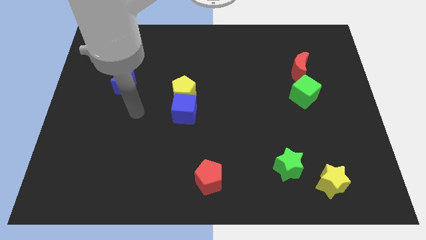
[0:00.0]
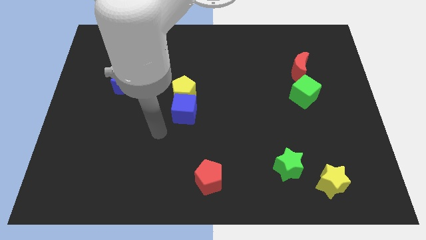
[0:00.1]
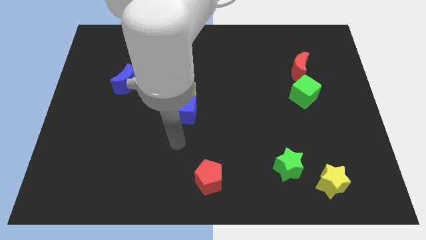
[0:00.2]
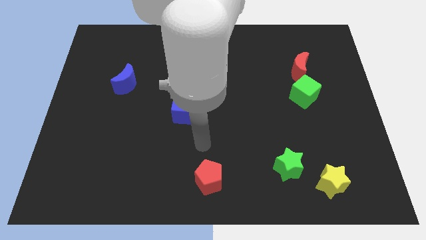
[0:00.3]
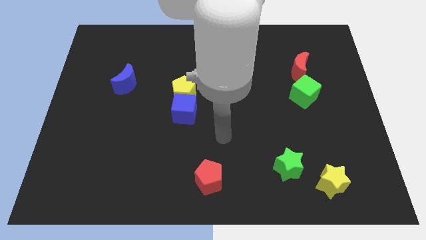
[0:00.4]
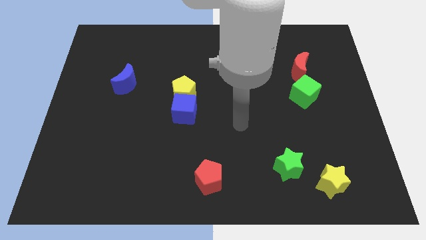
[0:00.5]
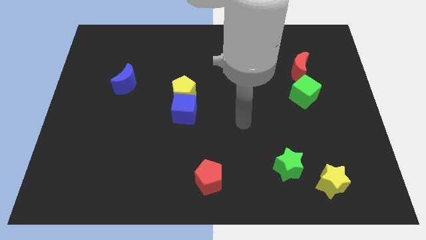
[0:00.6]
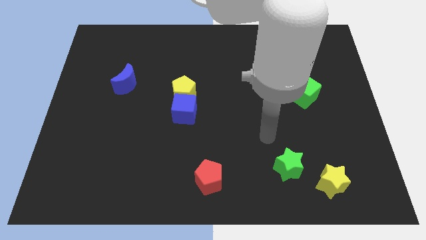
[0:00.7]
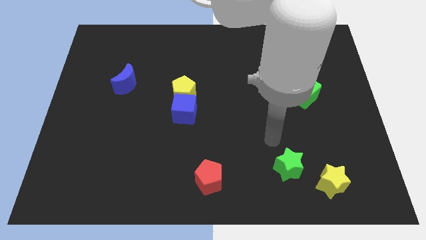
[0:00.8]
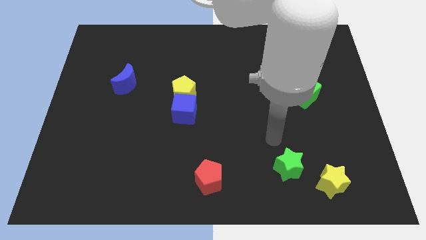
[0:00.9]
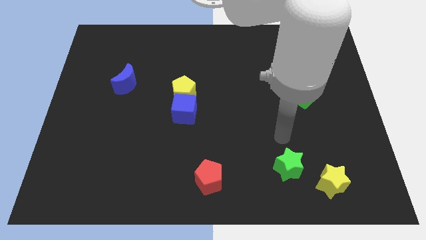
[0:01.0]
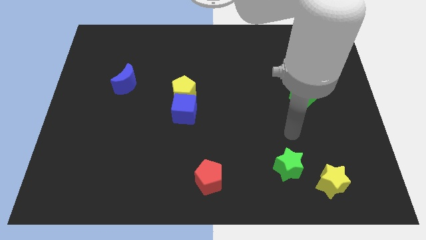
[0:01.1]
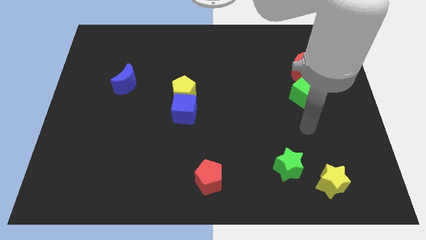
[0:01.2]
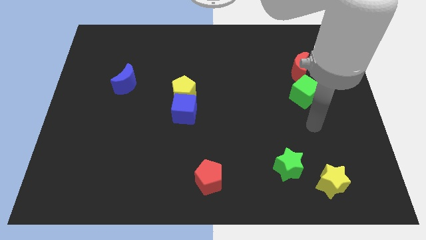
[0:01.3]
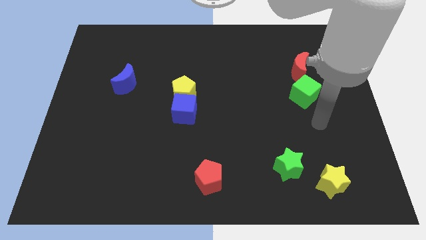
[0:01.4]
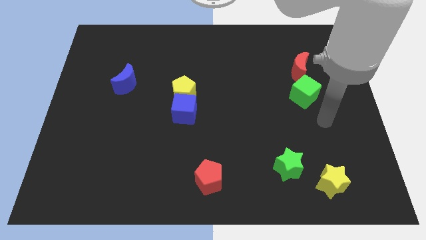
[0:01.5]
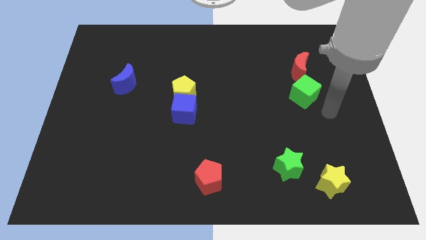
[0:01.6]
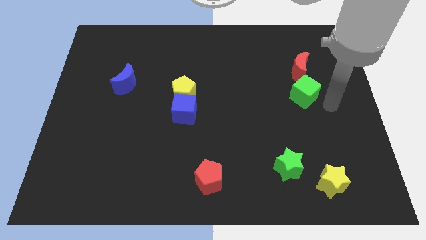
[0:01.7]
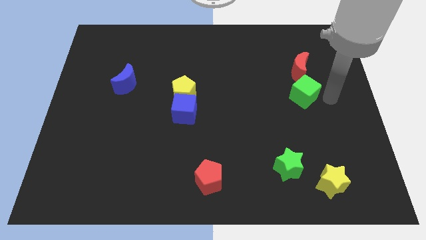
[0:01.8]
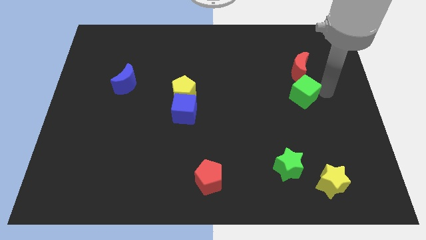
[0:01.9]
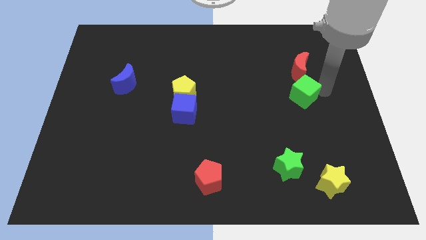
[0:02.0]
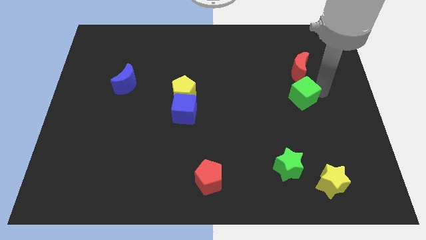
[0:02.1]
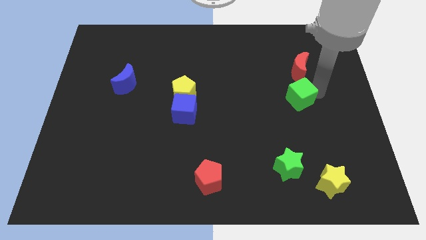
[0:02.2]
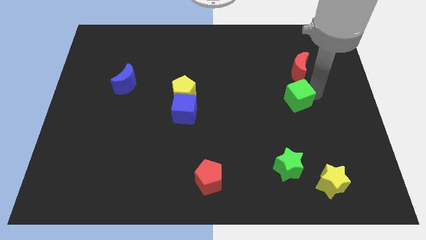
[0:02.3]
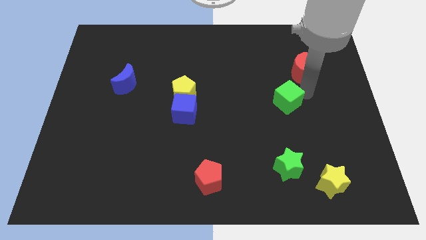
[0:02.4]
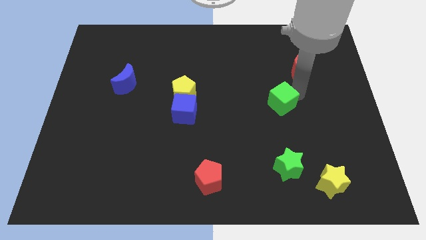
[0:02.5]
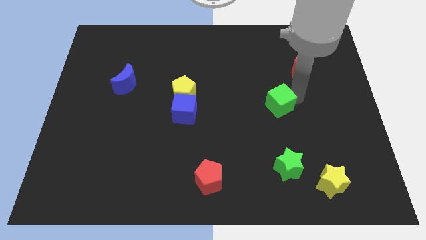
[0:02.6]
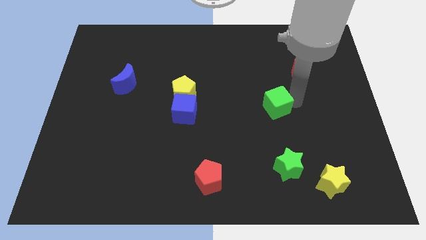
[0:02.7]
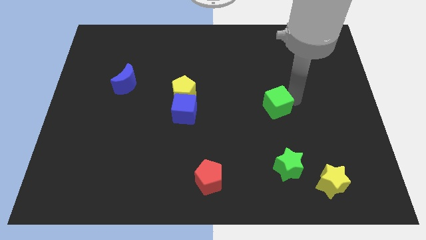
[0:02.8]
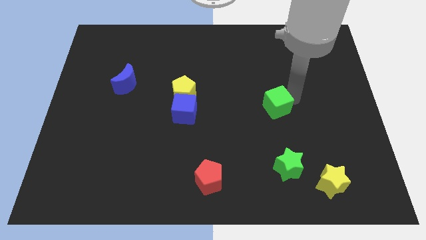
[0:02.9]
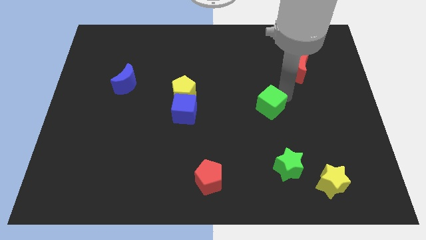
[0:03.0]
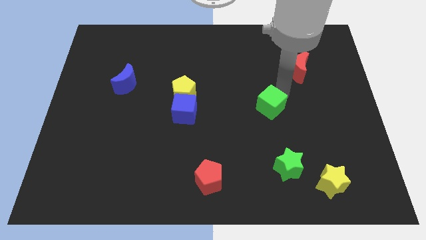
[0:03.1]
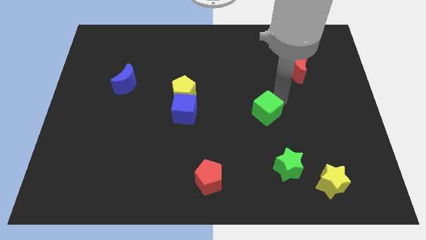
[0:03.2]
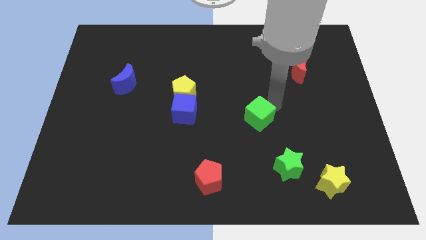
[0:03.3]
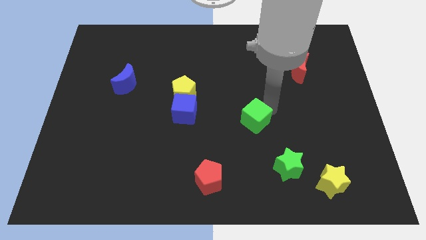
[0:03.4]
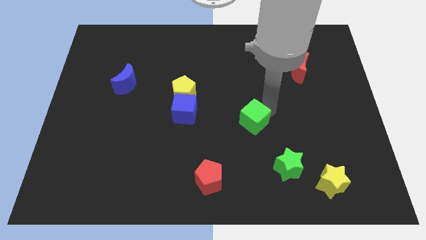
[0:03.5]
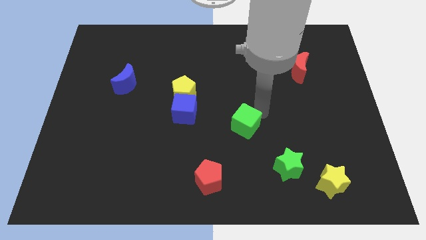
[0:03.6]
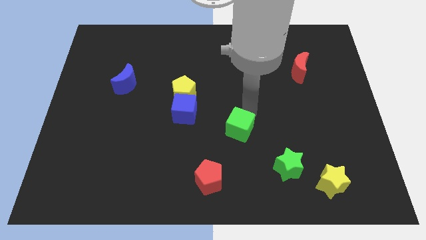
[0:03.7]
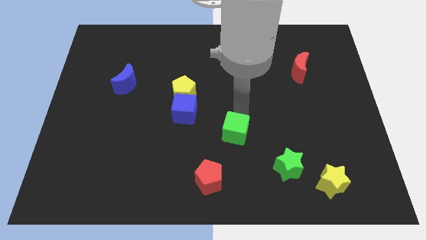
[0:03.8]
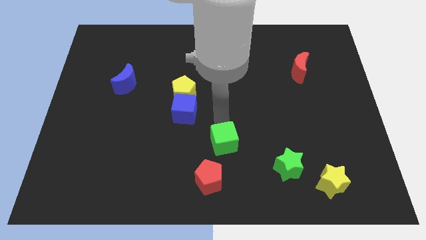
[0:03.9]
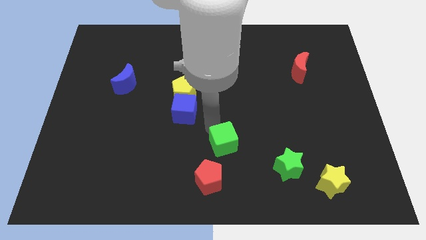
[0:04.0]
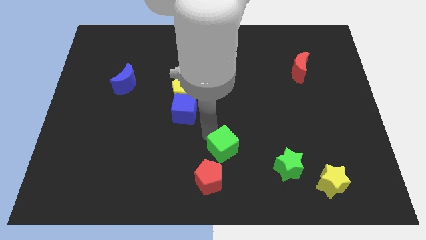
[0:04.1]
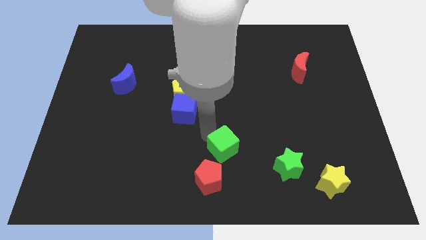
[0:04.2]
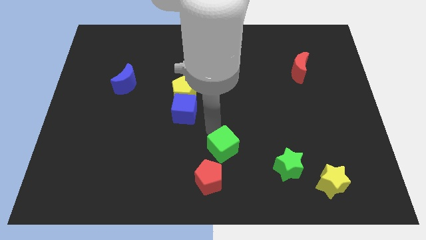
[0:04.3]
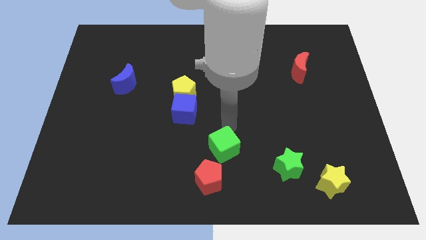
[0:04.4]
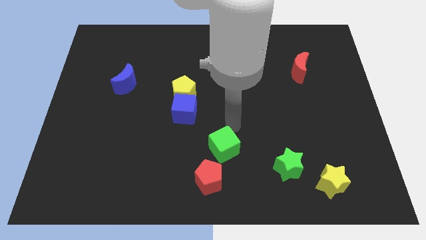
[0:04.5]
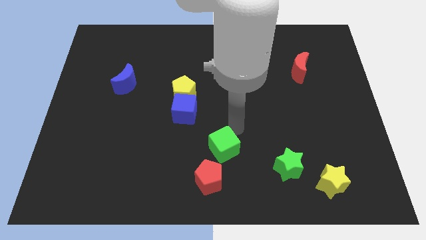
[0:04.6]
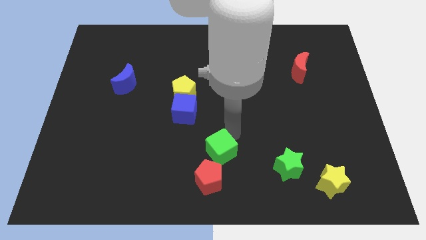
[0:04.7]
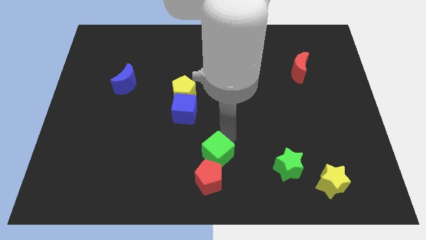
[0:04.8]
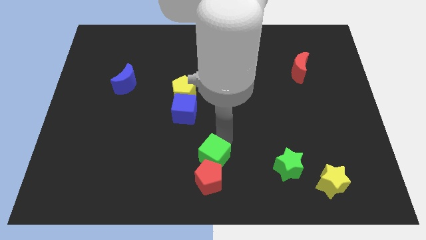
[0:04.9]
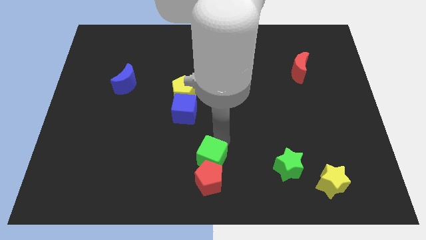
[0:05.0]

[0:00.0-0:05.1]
move the green cube towards the red pentagon

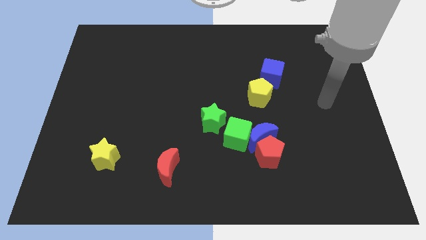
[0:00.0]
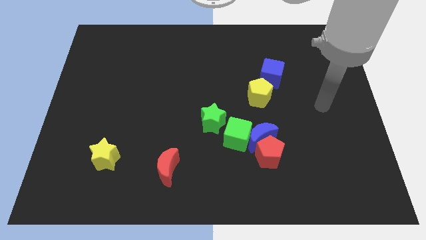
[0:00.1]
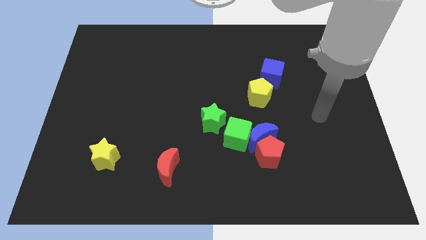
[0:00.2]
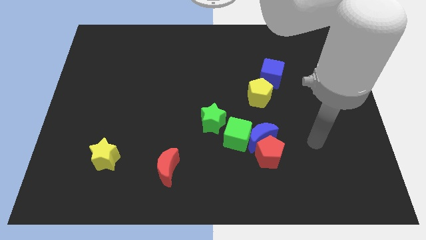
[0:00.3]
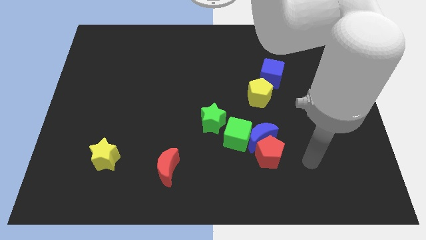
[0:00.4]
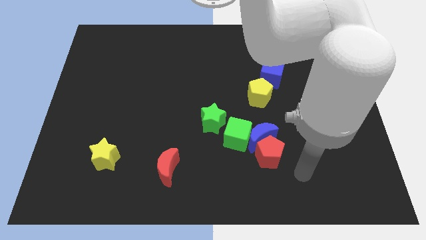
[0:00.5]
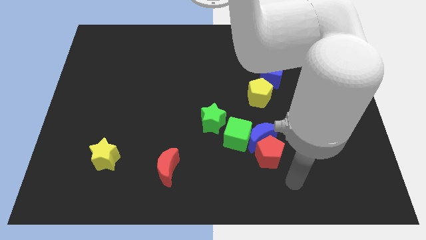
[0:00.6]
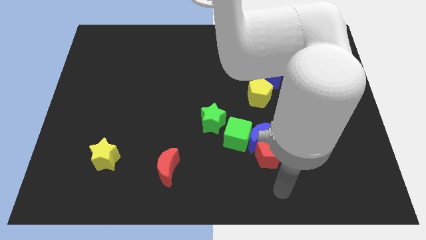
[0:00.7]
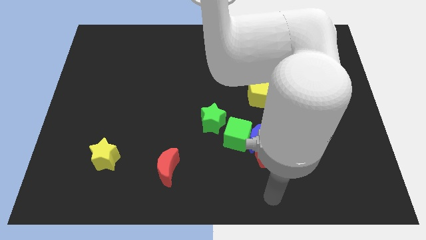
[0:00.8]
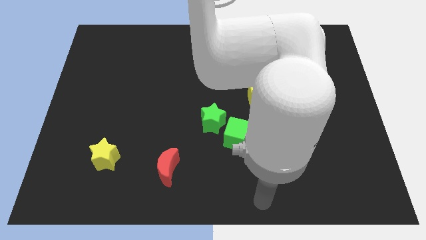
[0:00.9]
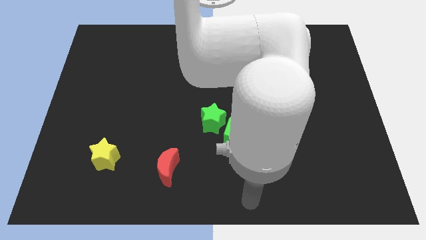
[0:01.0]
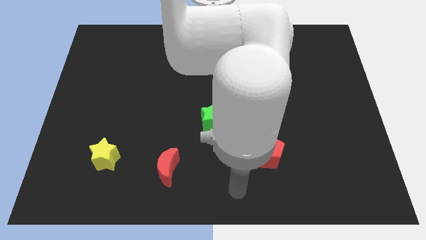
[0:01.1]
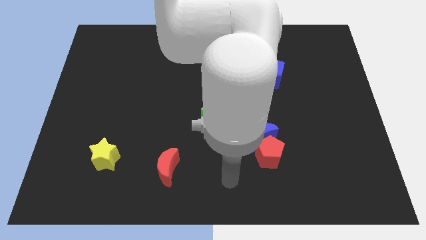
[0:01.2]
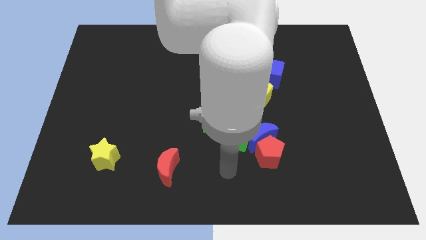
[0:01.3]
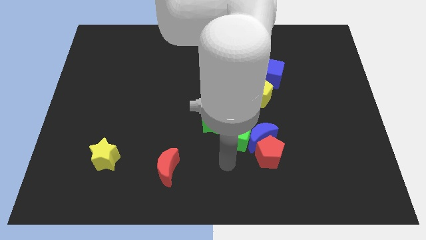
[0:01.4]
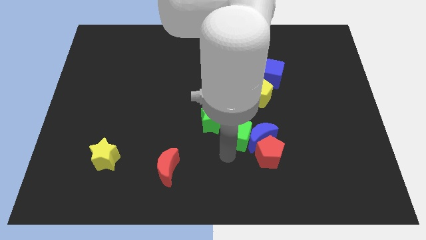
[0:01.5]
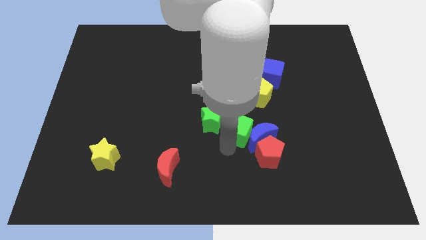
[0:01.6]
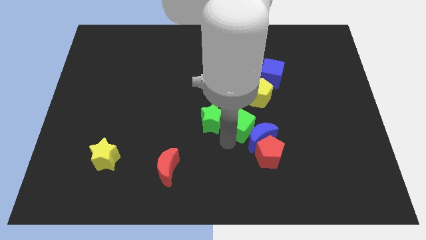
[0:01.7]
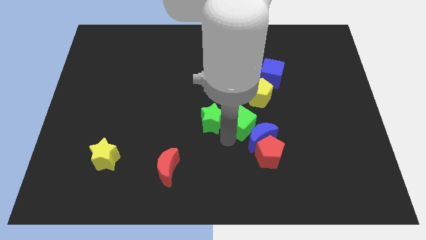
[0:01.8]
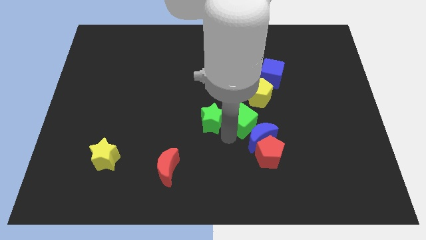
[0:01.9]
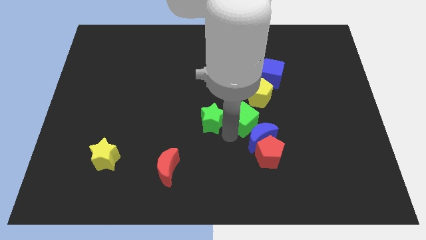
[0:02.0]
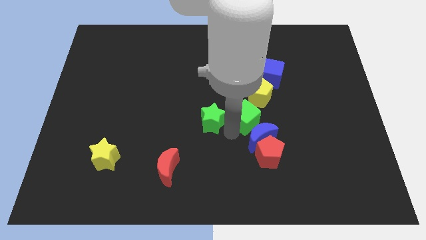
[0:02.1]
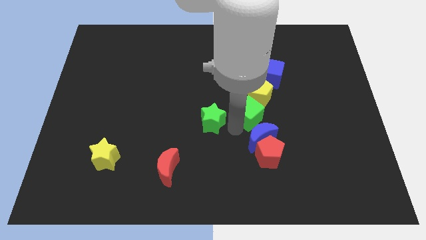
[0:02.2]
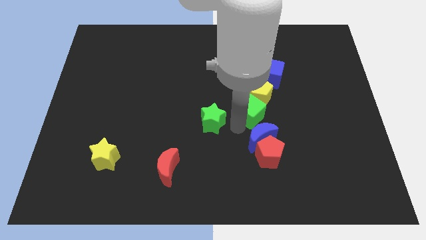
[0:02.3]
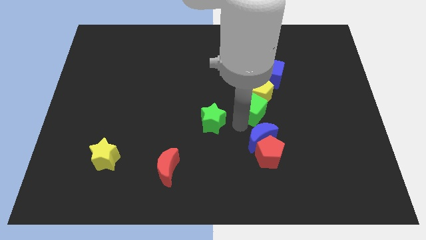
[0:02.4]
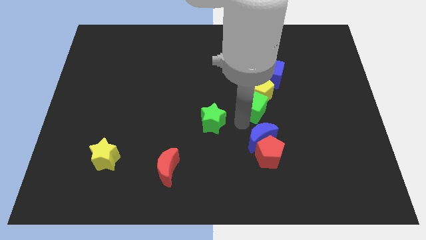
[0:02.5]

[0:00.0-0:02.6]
push the green cube to the yellow pentagon
